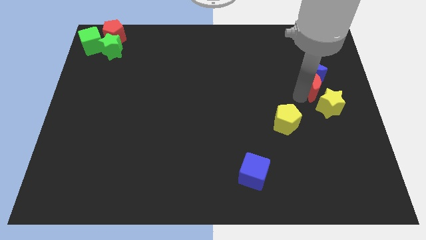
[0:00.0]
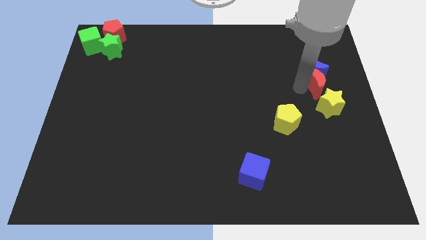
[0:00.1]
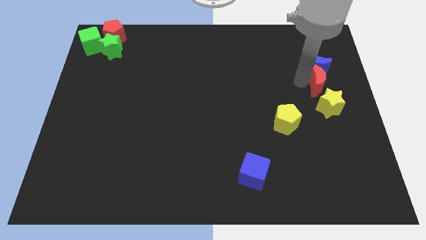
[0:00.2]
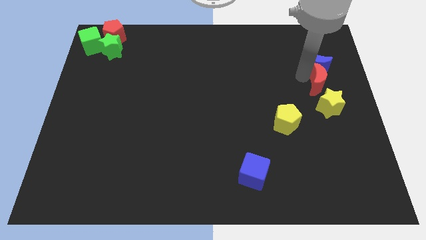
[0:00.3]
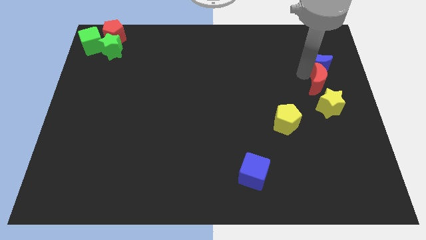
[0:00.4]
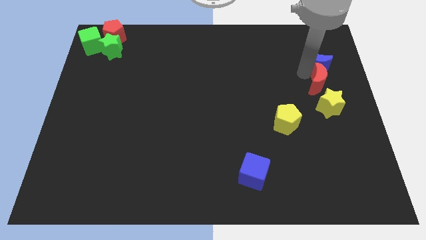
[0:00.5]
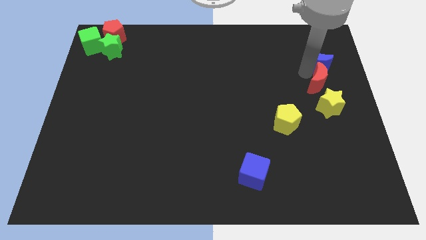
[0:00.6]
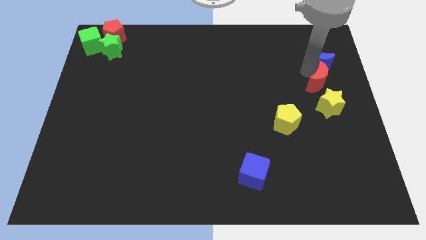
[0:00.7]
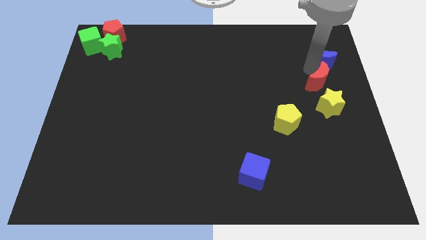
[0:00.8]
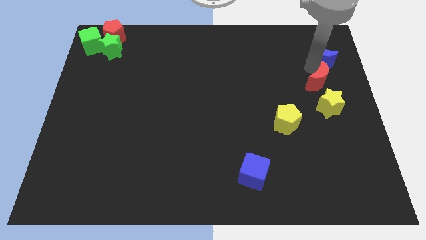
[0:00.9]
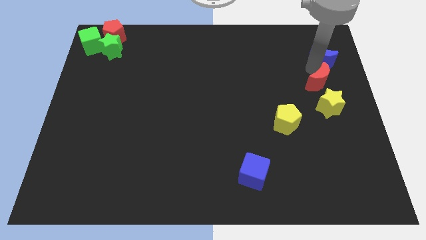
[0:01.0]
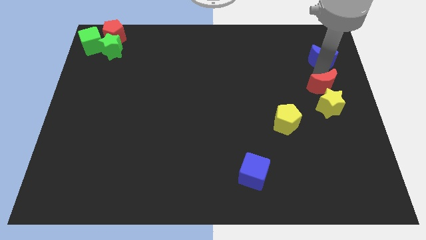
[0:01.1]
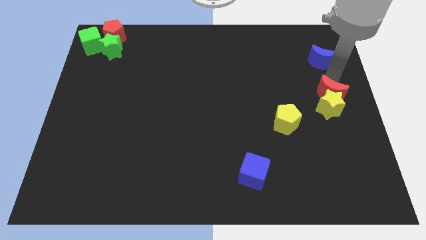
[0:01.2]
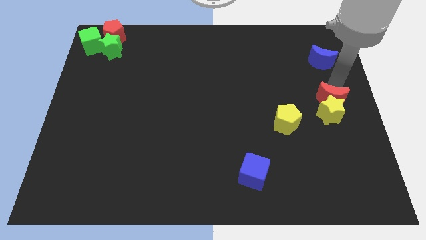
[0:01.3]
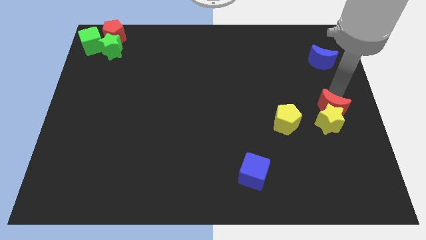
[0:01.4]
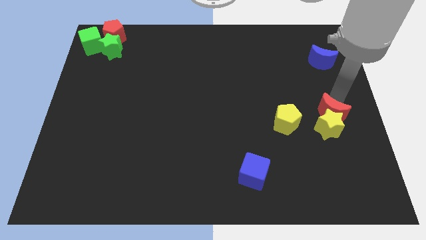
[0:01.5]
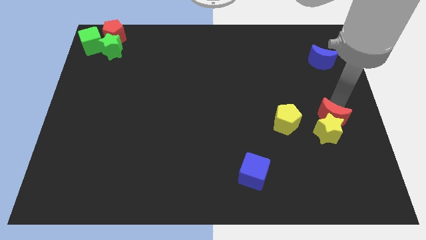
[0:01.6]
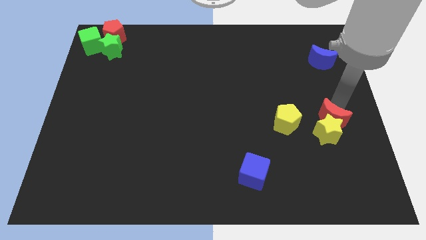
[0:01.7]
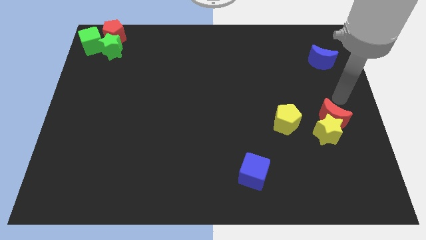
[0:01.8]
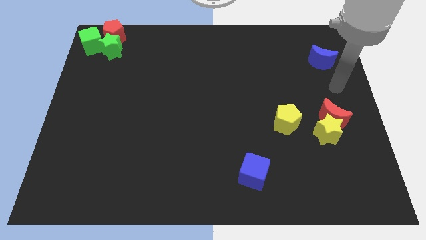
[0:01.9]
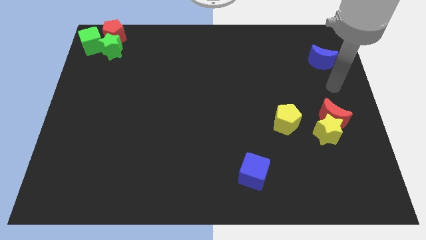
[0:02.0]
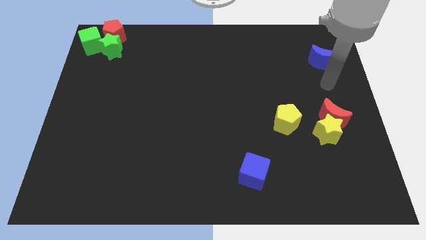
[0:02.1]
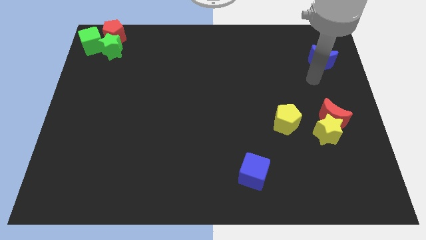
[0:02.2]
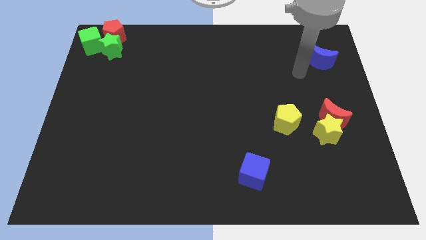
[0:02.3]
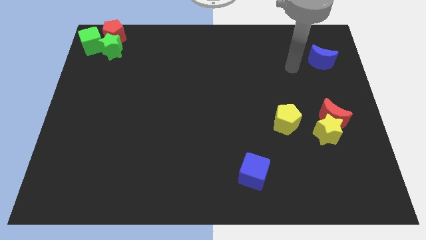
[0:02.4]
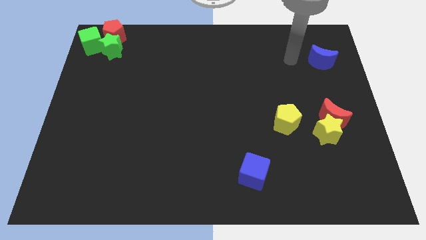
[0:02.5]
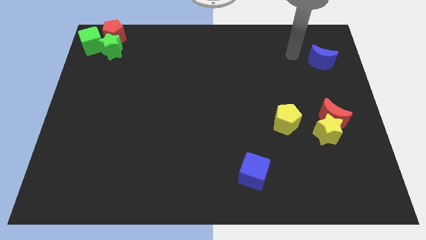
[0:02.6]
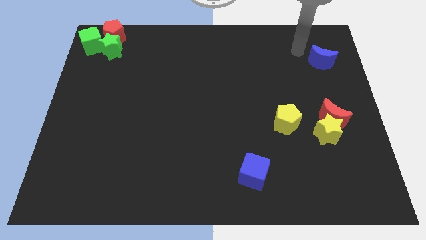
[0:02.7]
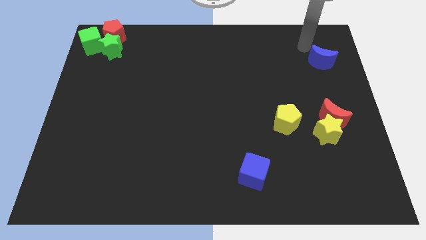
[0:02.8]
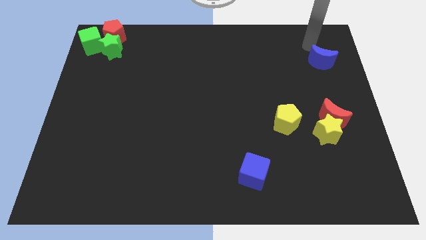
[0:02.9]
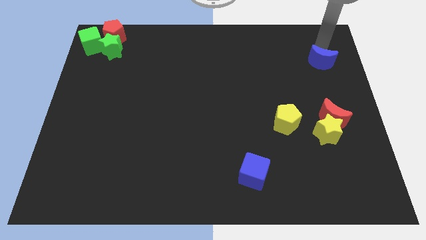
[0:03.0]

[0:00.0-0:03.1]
adjust the red moon to above the yellow star

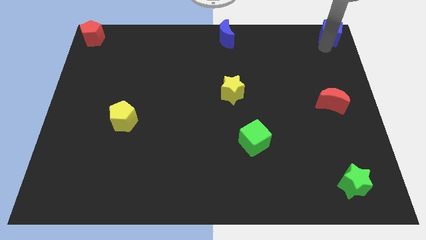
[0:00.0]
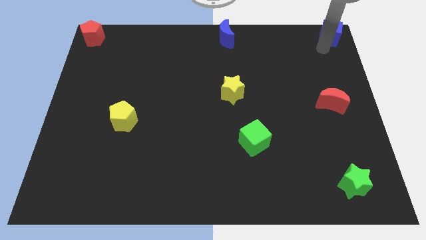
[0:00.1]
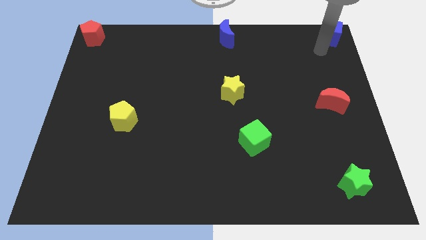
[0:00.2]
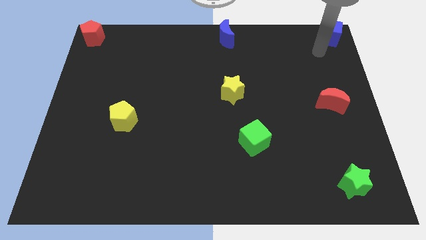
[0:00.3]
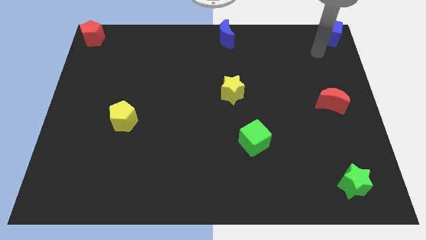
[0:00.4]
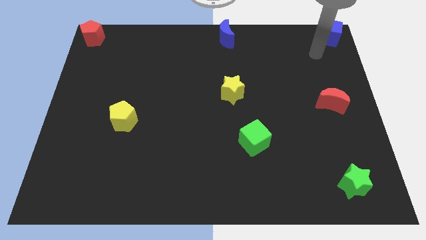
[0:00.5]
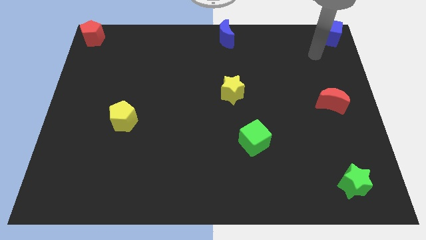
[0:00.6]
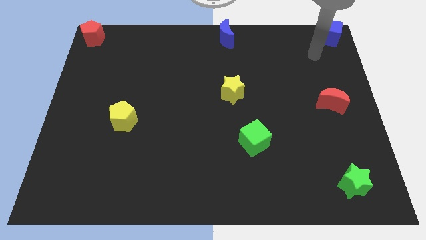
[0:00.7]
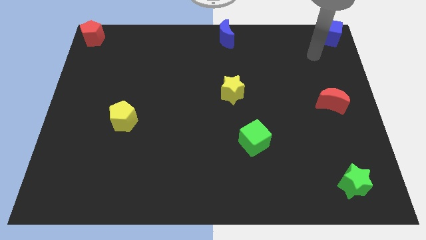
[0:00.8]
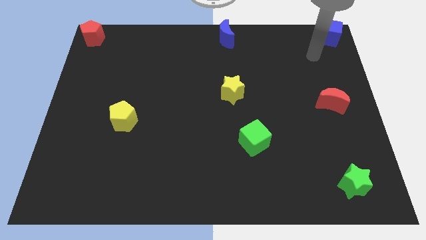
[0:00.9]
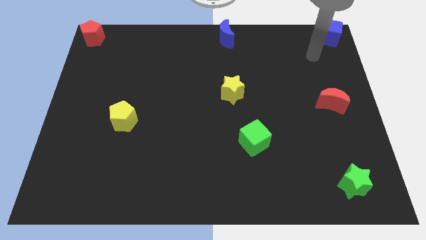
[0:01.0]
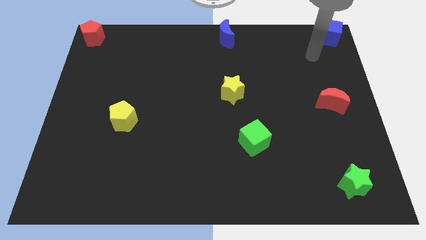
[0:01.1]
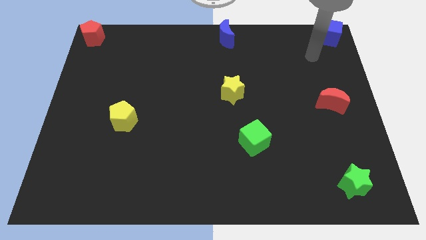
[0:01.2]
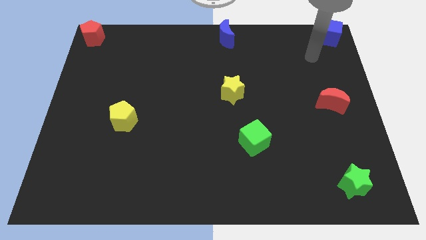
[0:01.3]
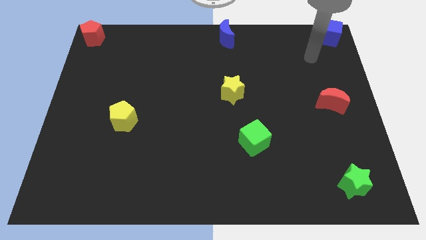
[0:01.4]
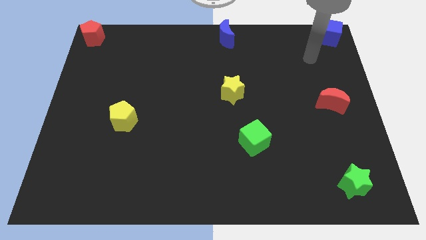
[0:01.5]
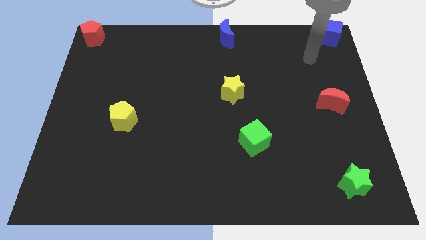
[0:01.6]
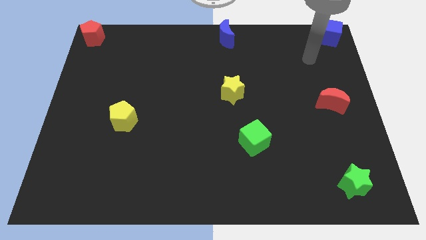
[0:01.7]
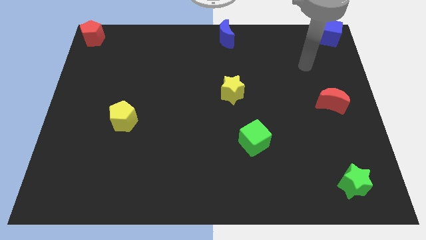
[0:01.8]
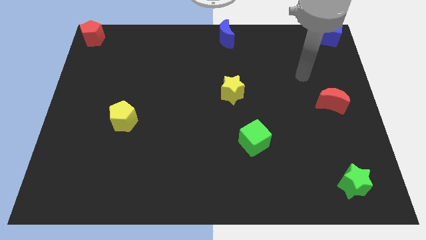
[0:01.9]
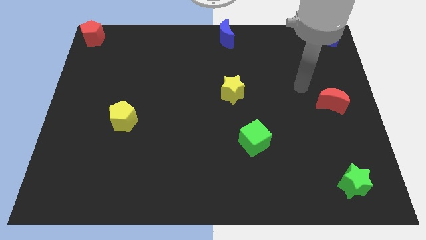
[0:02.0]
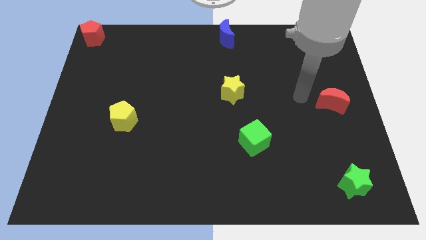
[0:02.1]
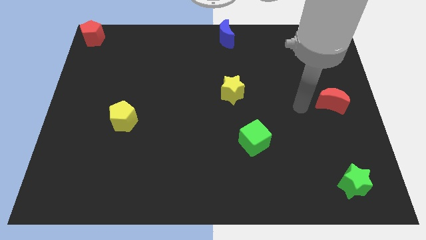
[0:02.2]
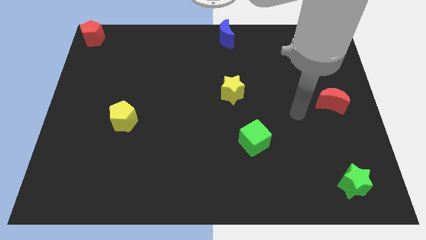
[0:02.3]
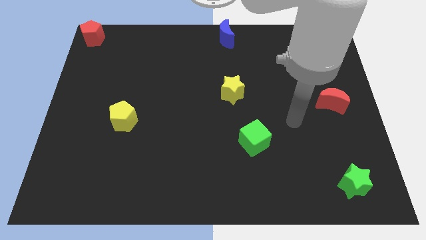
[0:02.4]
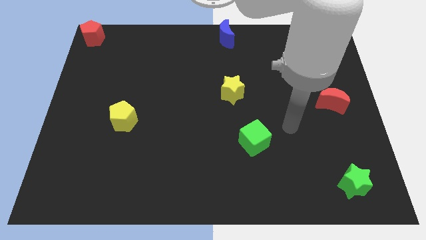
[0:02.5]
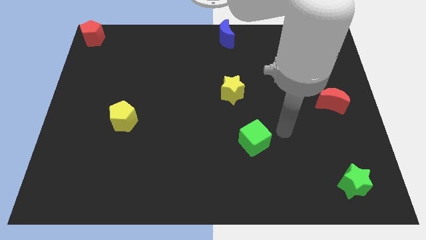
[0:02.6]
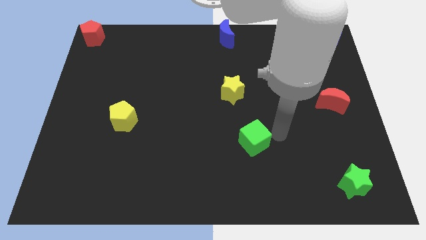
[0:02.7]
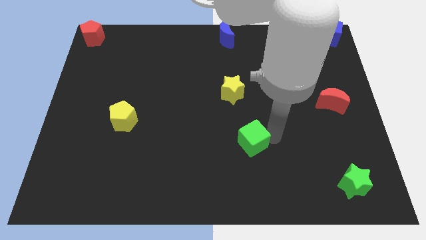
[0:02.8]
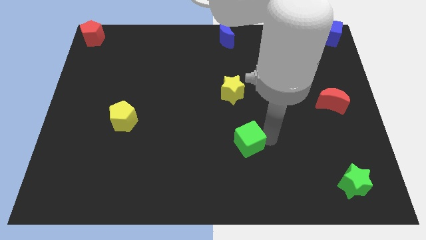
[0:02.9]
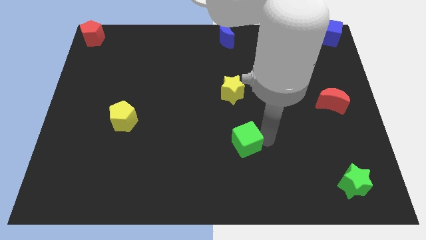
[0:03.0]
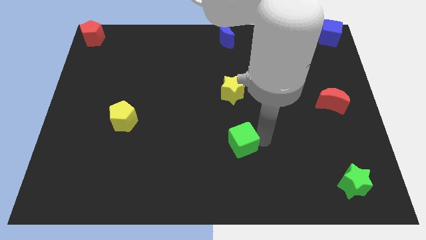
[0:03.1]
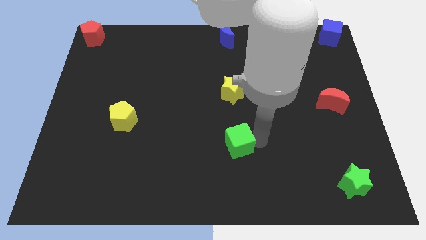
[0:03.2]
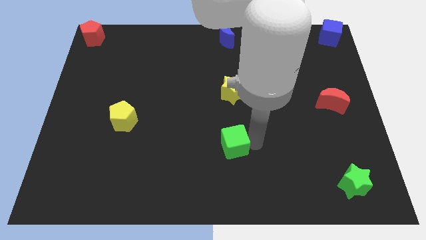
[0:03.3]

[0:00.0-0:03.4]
move your arm towards the green cube

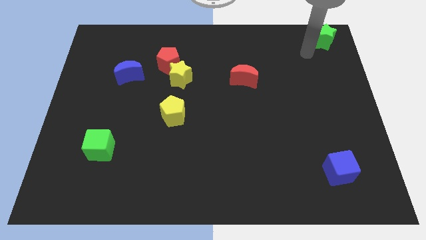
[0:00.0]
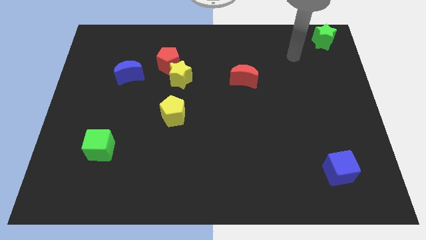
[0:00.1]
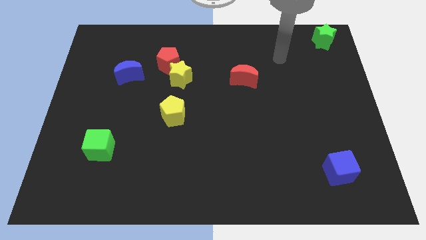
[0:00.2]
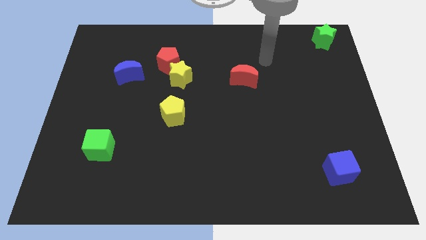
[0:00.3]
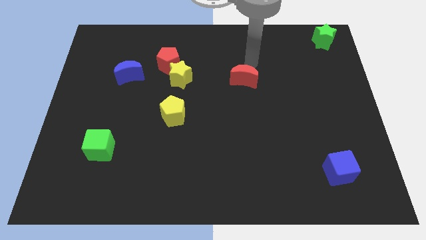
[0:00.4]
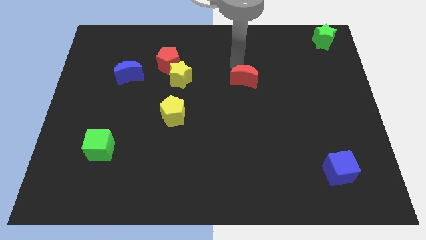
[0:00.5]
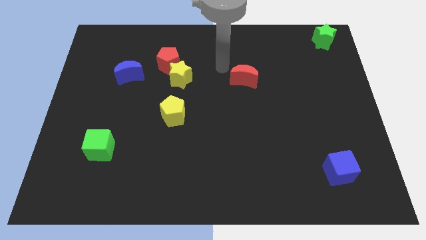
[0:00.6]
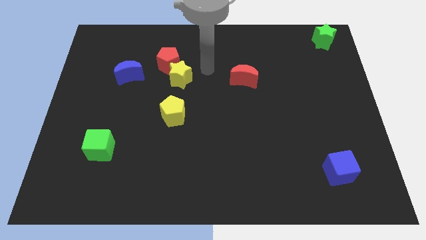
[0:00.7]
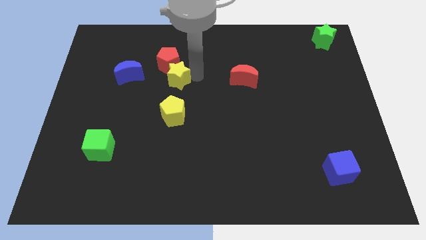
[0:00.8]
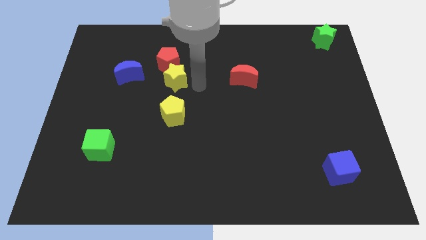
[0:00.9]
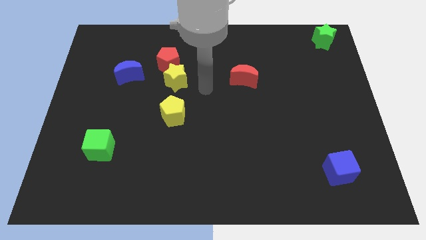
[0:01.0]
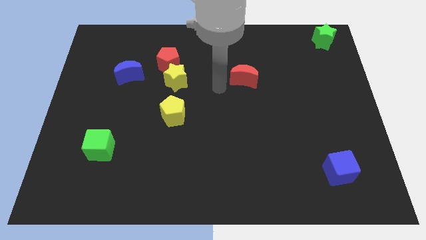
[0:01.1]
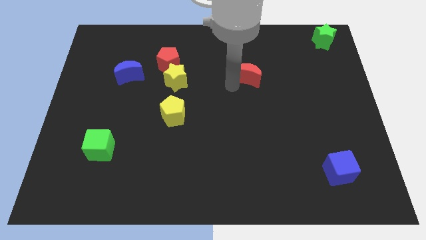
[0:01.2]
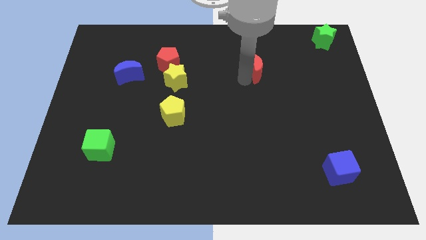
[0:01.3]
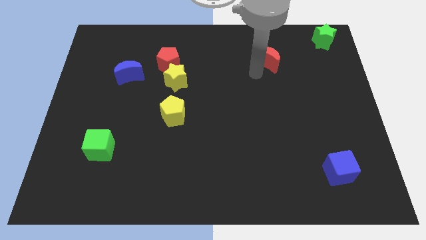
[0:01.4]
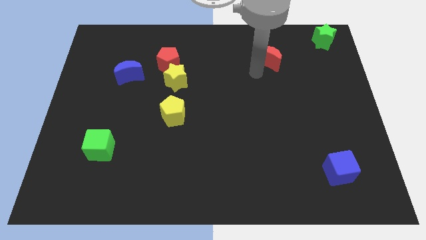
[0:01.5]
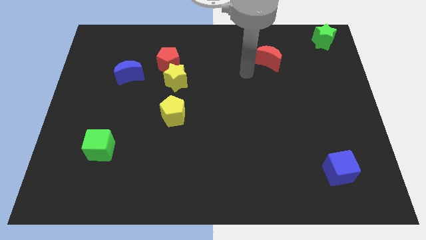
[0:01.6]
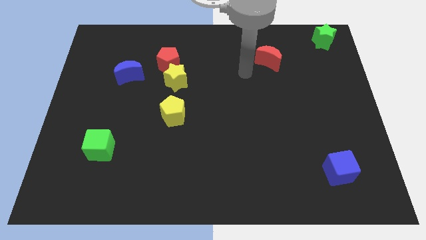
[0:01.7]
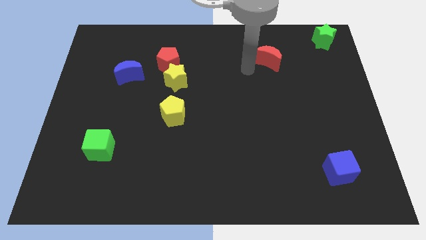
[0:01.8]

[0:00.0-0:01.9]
move the red crescent towards green star

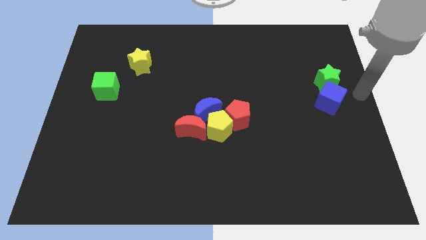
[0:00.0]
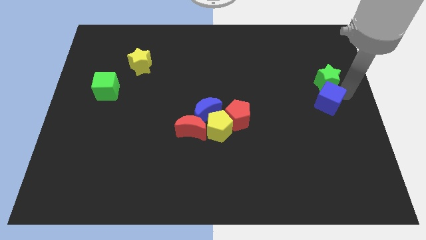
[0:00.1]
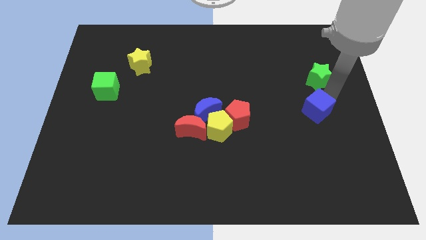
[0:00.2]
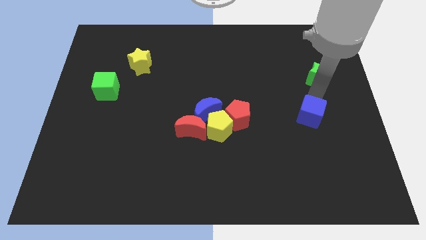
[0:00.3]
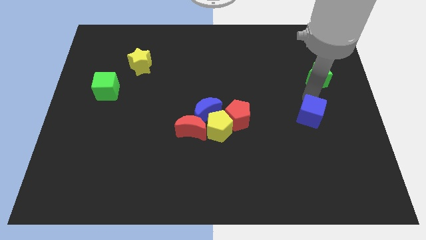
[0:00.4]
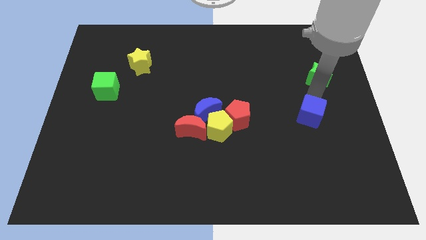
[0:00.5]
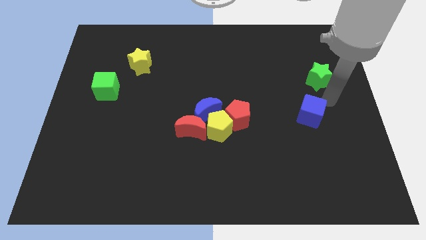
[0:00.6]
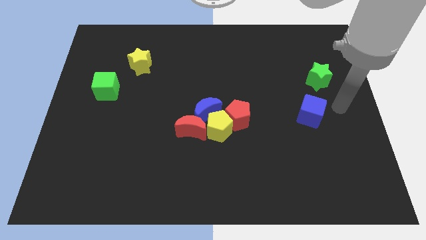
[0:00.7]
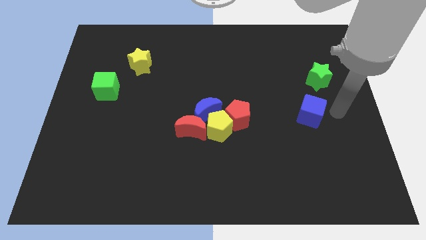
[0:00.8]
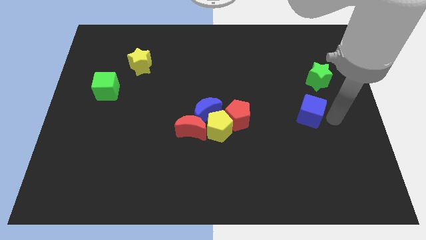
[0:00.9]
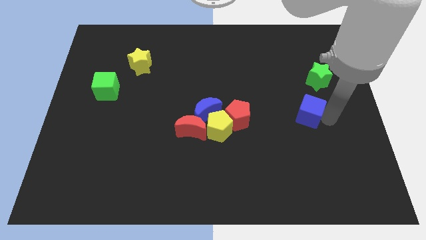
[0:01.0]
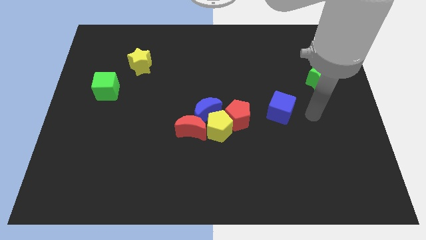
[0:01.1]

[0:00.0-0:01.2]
push the blue cube away from the green star
